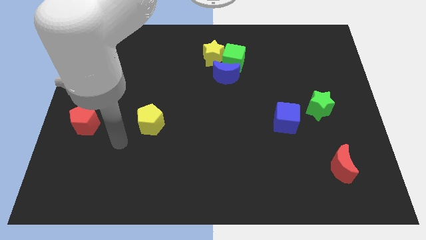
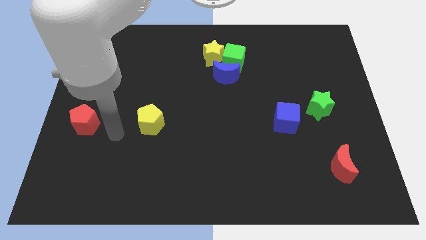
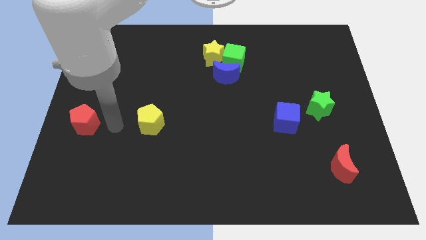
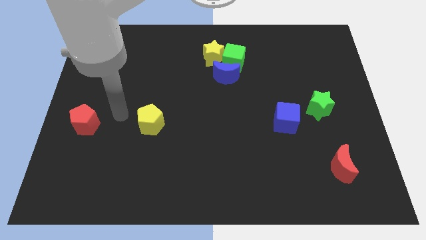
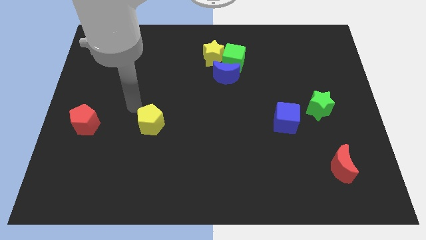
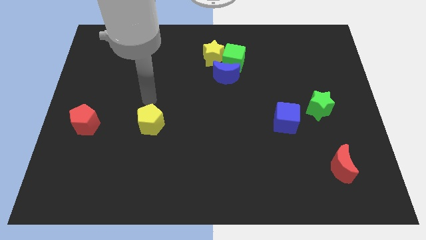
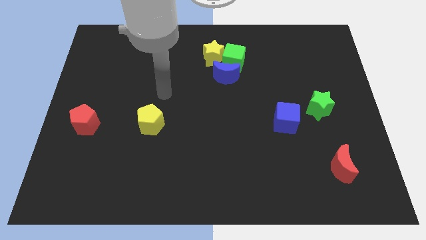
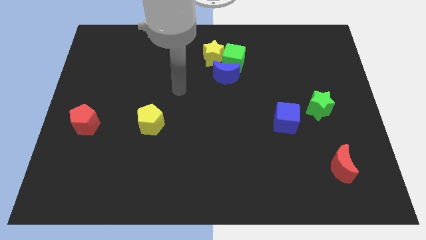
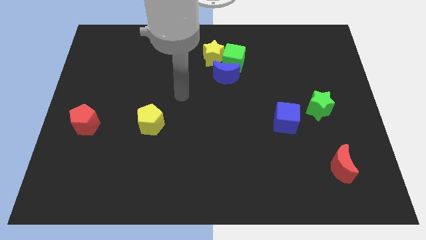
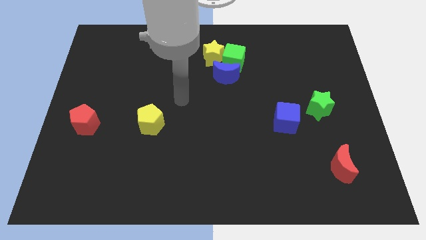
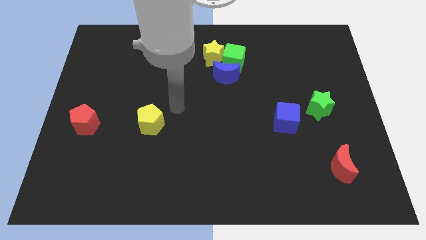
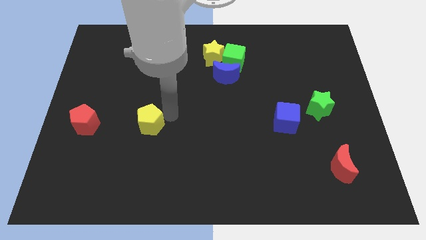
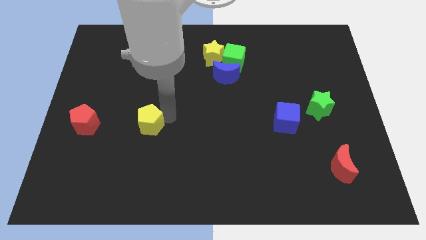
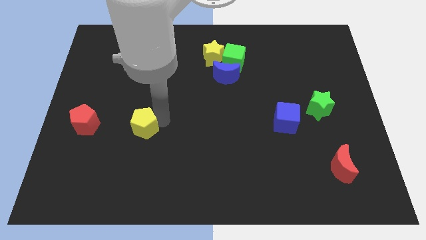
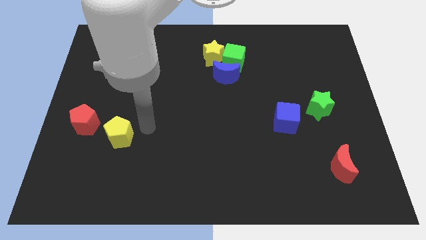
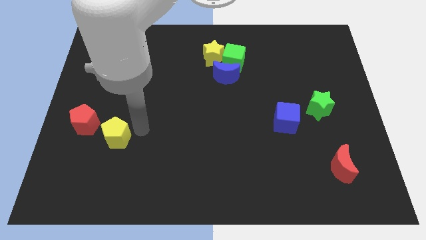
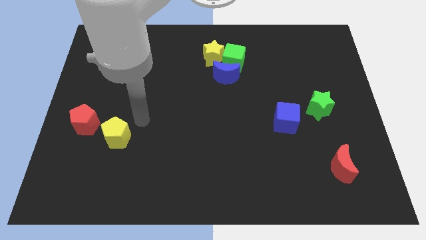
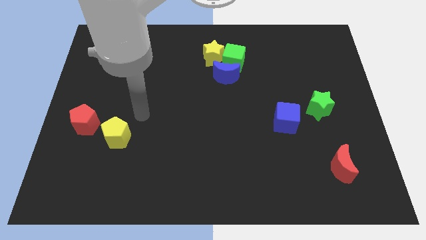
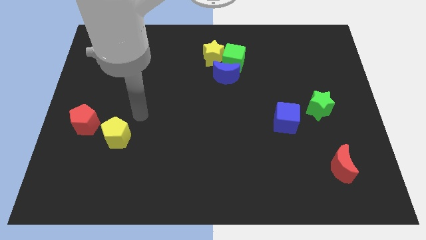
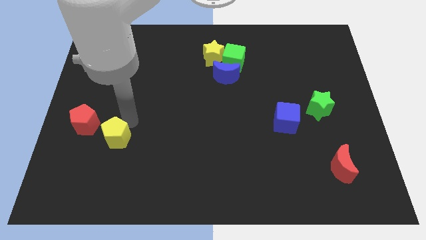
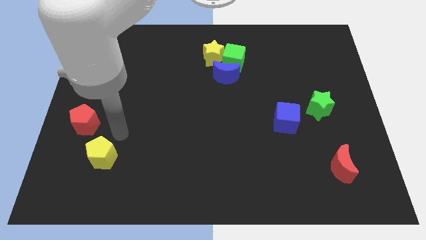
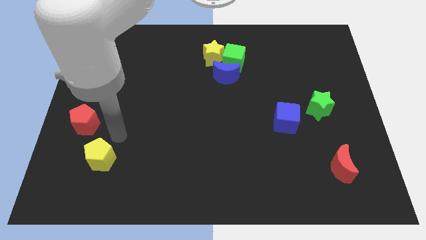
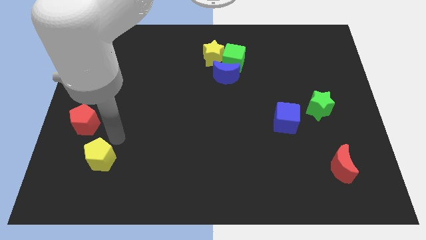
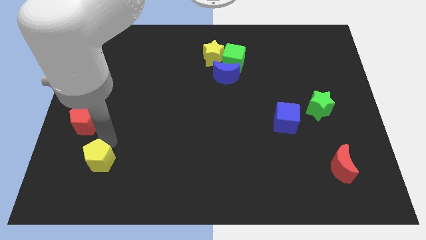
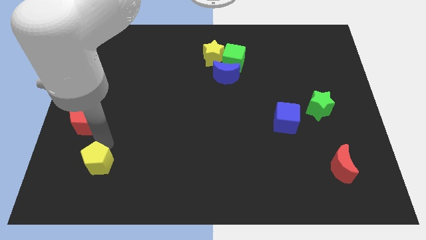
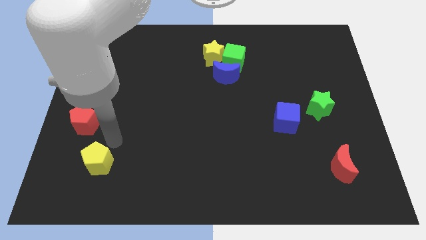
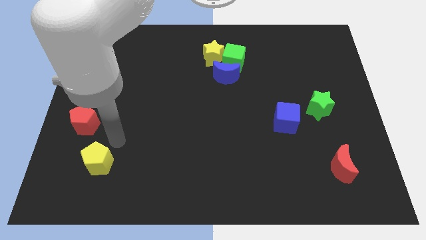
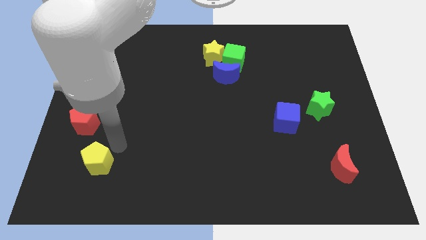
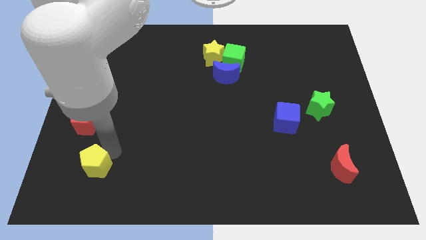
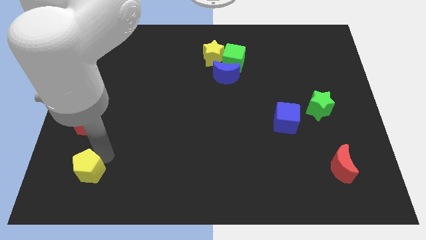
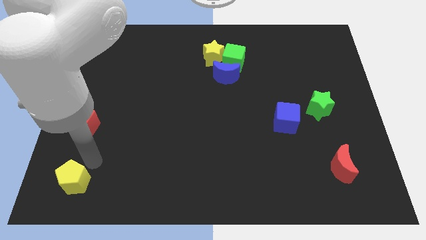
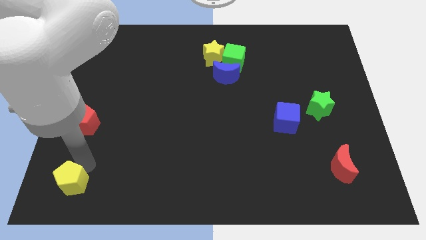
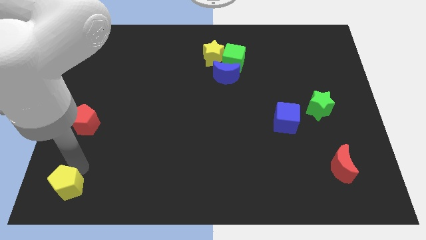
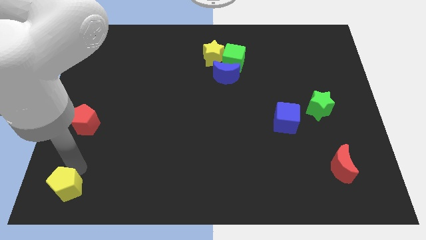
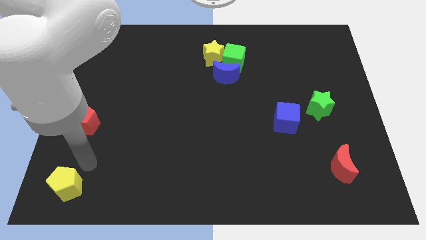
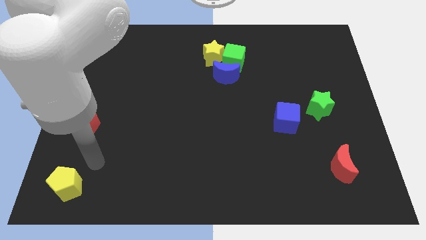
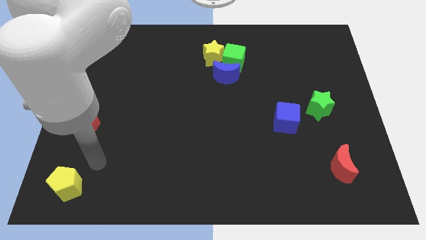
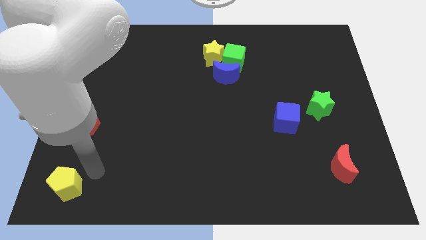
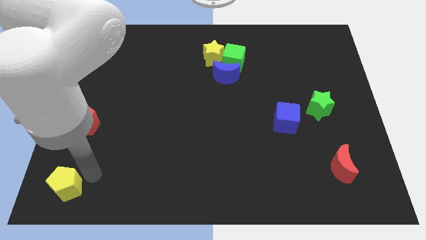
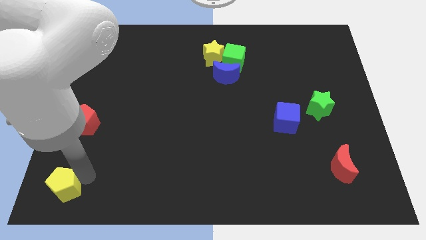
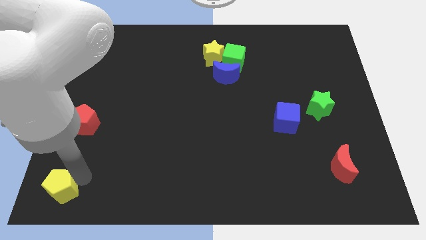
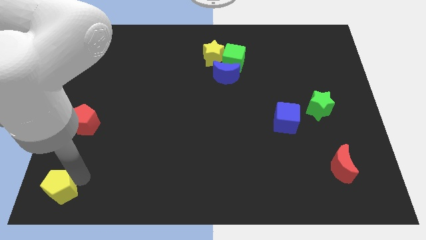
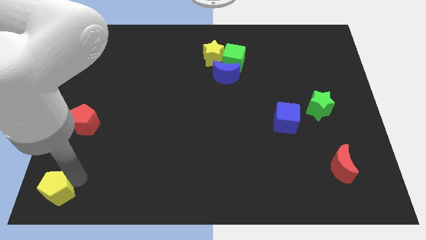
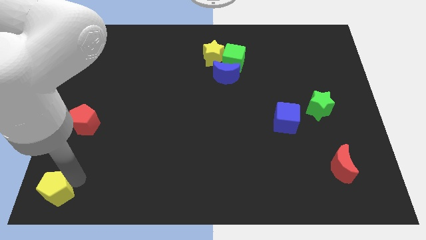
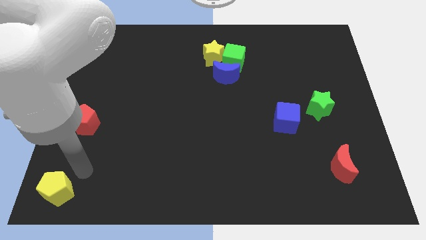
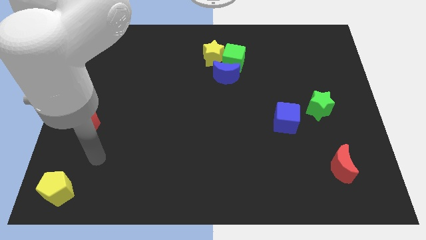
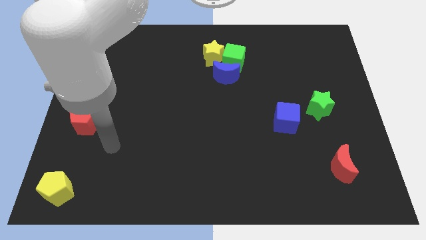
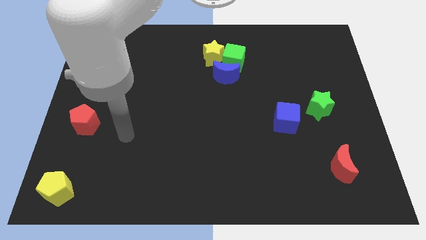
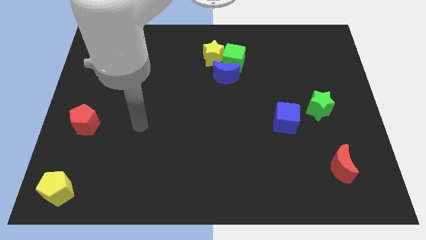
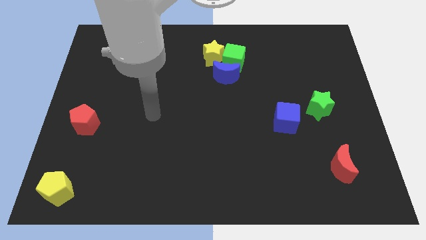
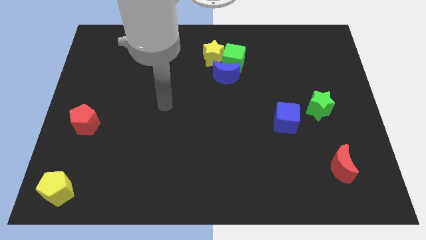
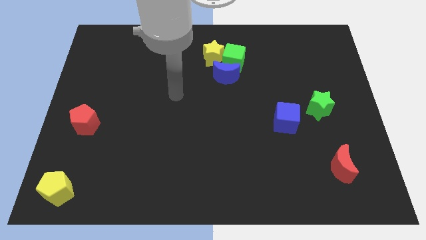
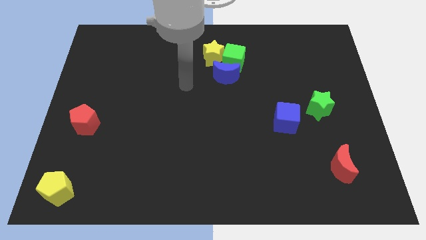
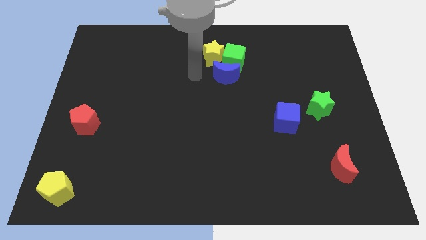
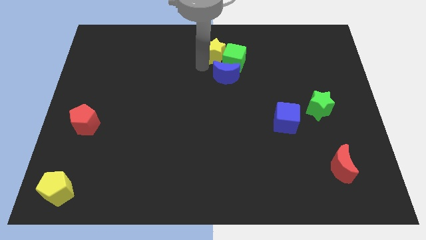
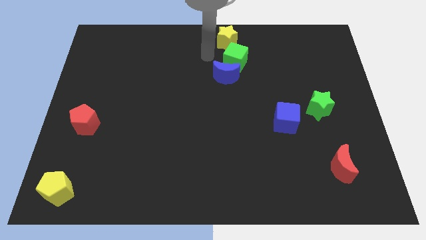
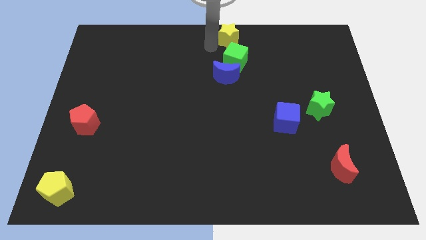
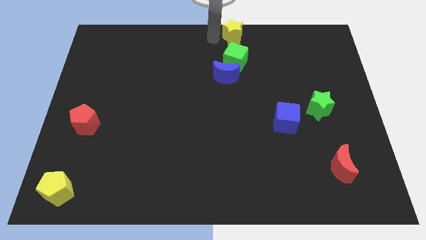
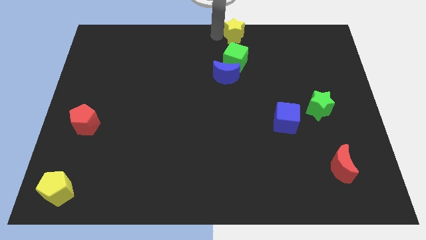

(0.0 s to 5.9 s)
push the yellow pentagon downward

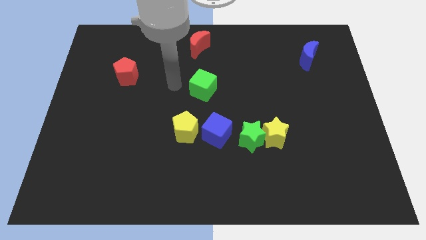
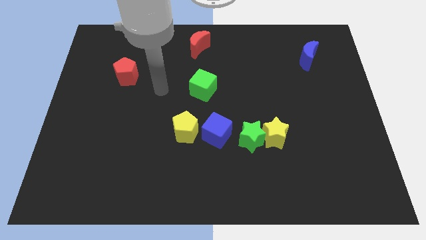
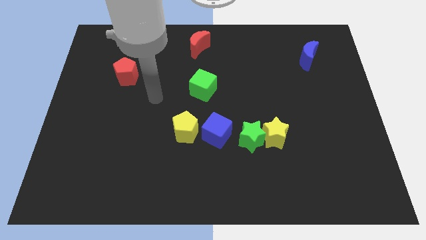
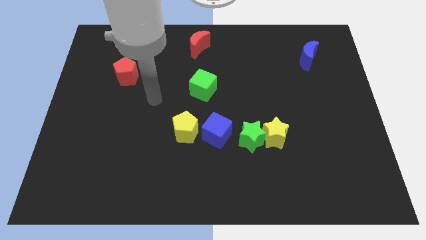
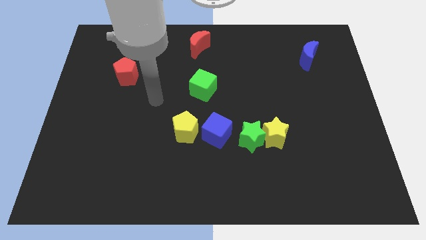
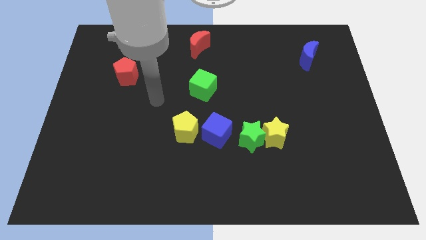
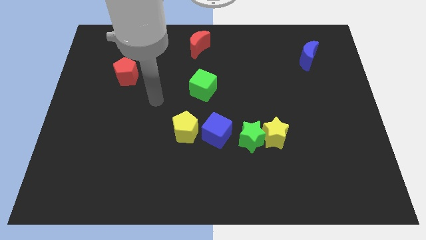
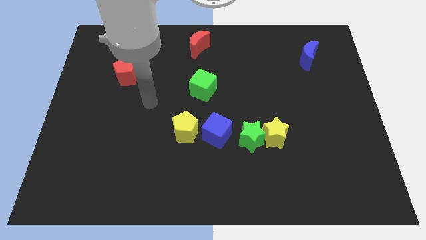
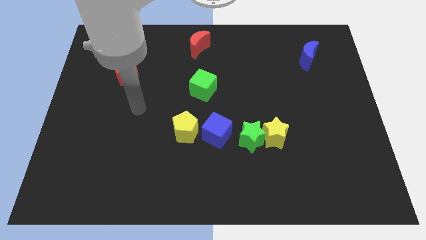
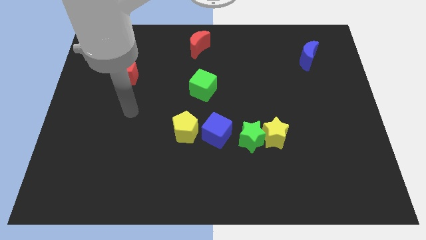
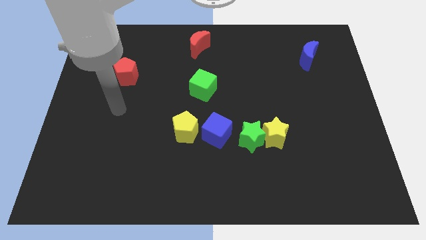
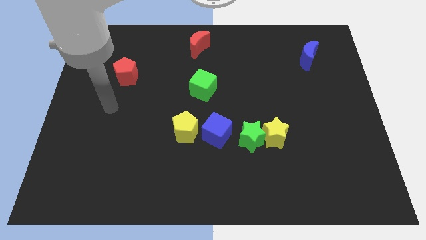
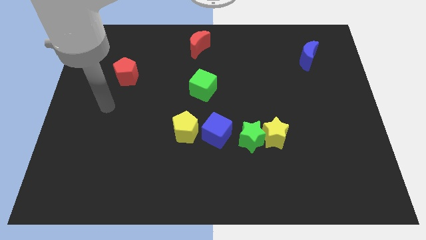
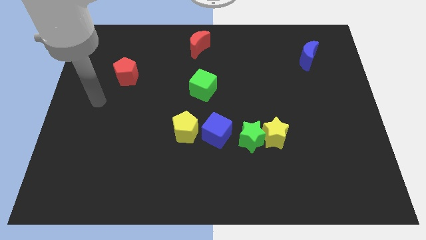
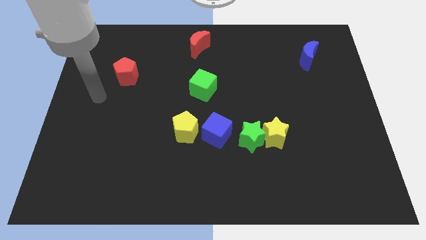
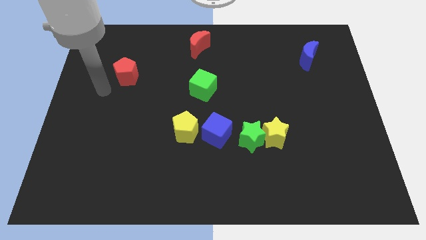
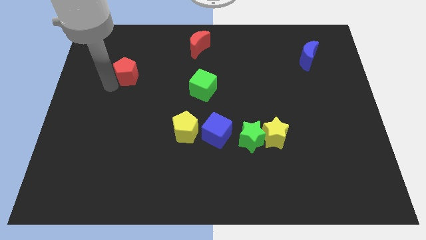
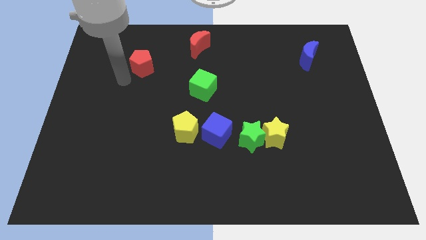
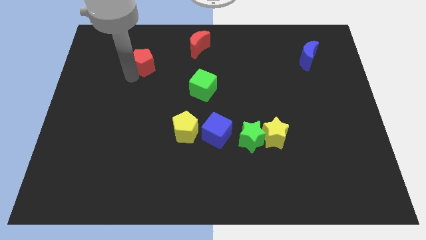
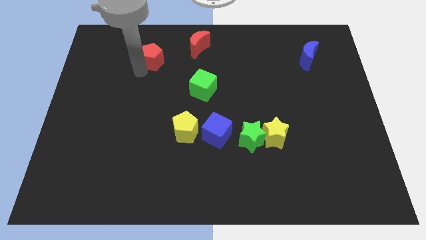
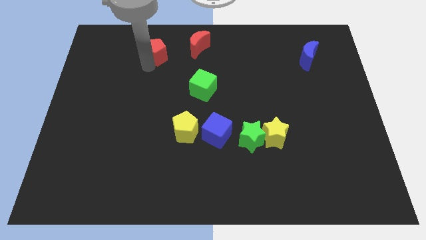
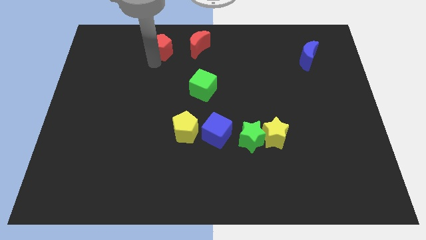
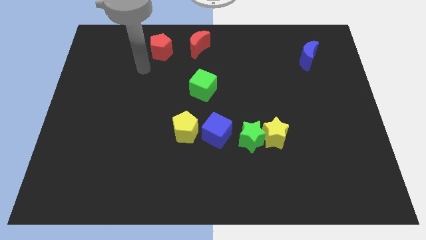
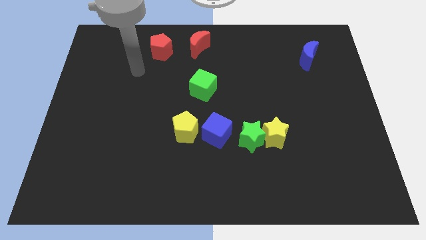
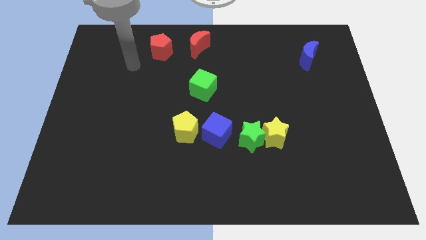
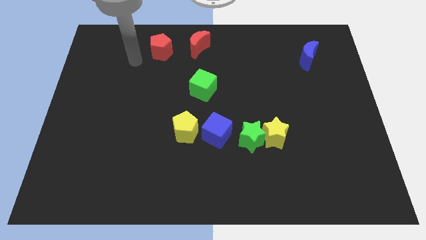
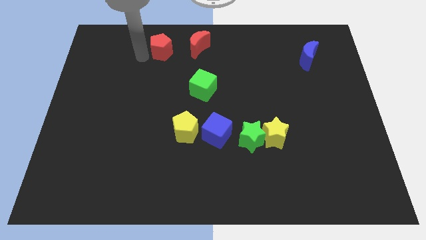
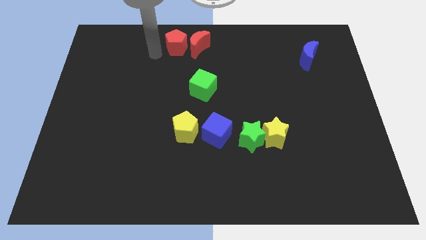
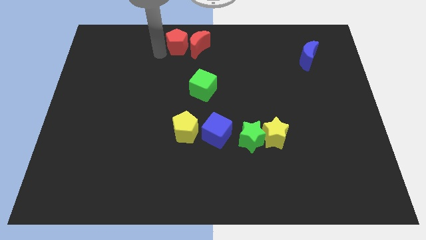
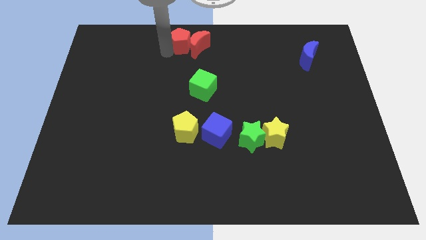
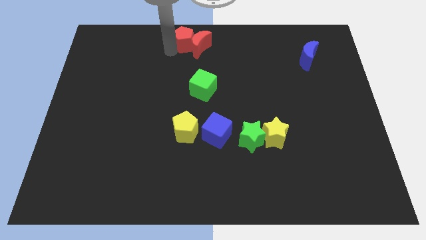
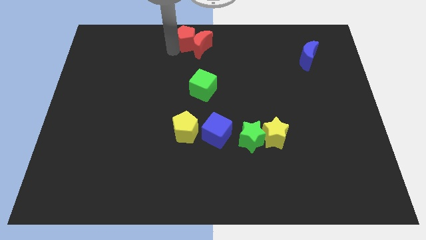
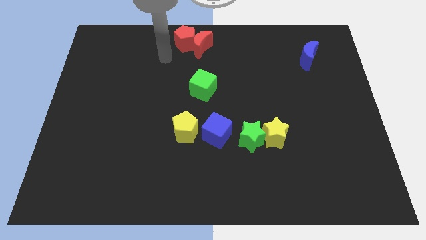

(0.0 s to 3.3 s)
place red crescent and red pentagon at center top
